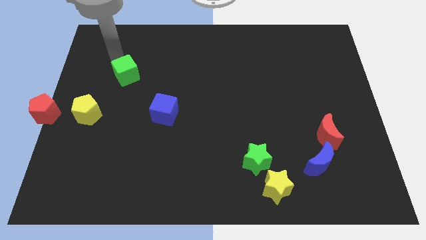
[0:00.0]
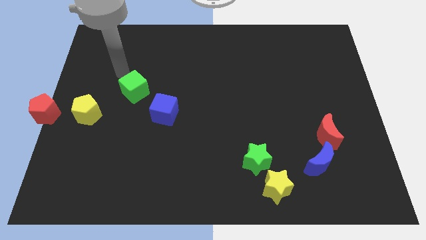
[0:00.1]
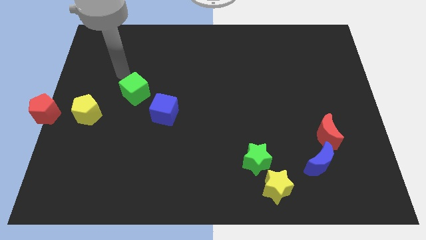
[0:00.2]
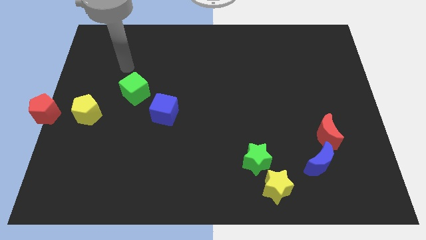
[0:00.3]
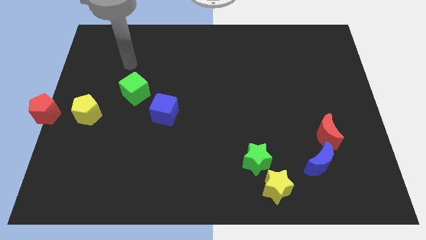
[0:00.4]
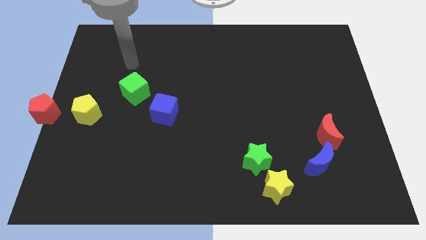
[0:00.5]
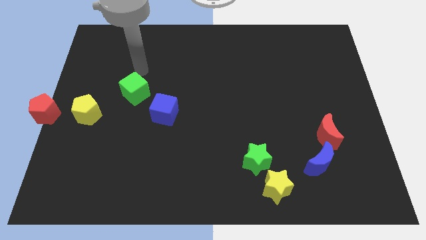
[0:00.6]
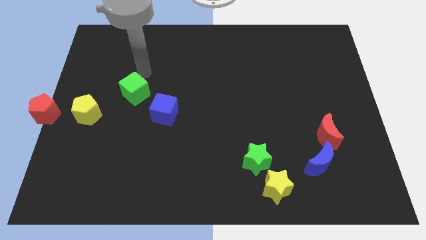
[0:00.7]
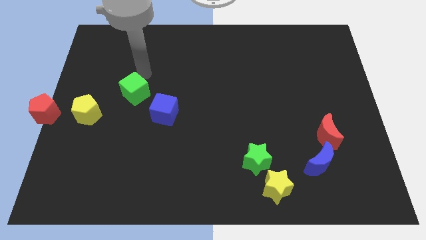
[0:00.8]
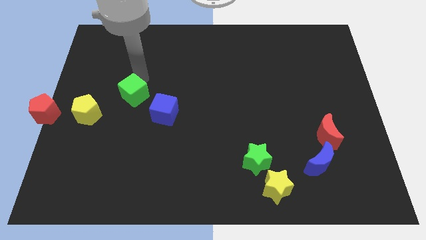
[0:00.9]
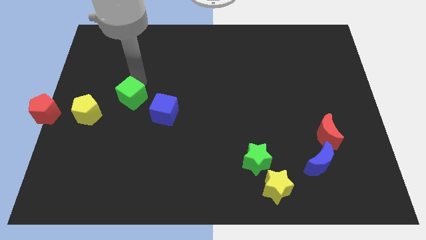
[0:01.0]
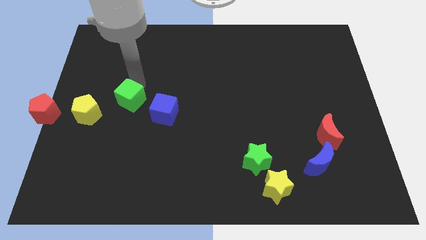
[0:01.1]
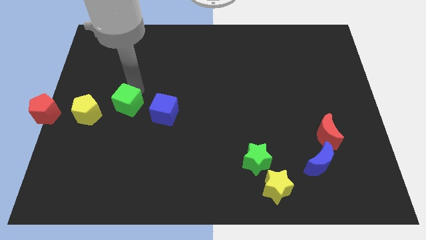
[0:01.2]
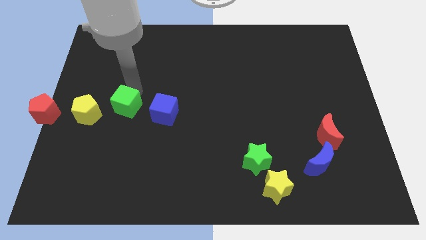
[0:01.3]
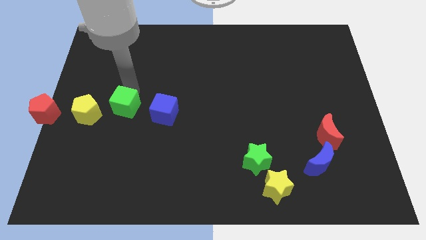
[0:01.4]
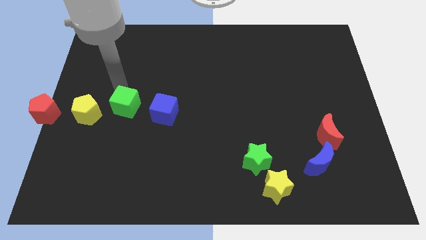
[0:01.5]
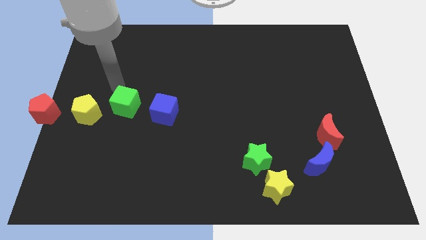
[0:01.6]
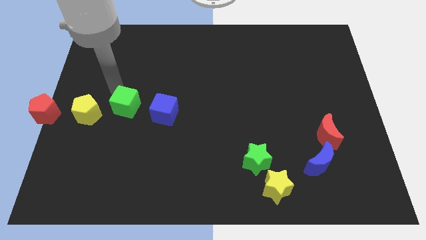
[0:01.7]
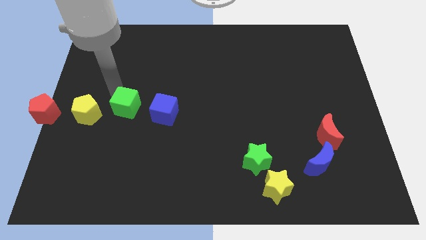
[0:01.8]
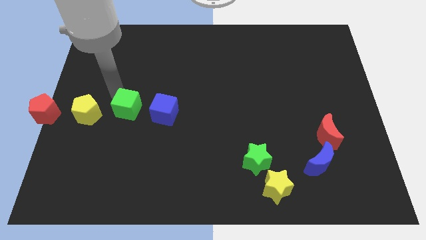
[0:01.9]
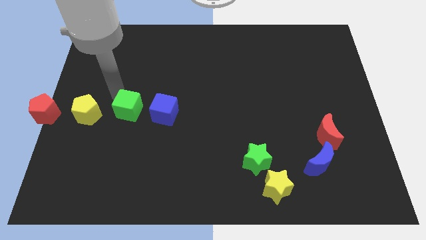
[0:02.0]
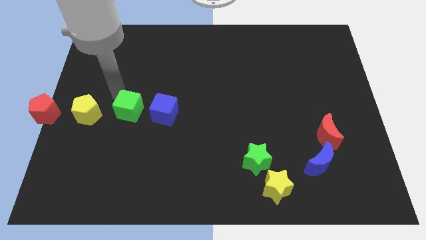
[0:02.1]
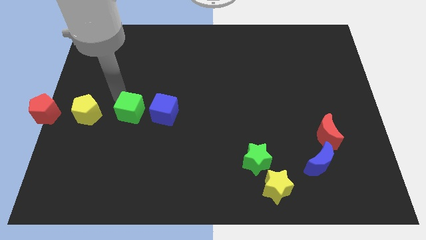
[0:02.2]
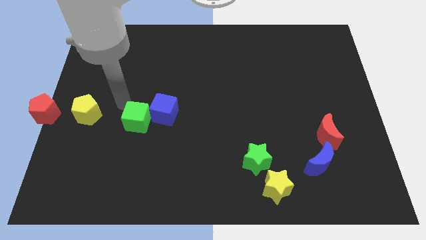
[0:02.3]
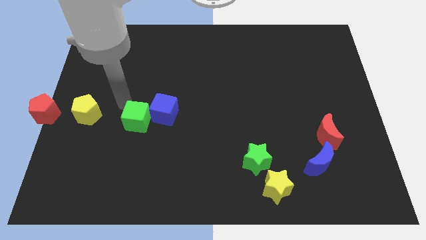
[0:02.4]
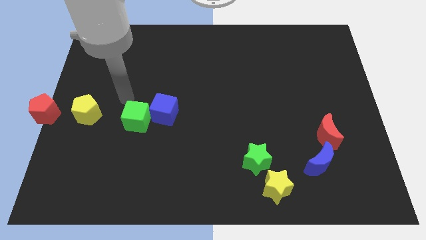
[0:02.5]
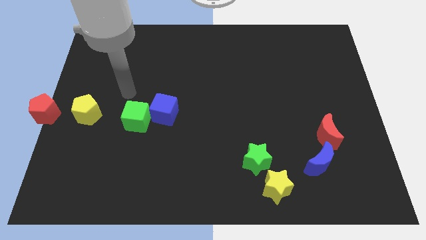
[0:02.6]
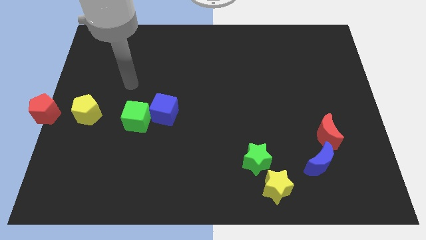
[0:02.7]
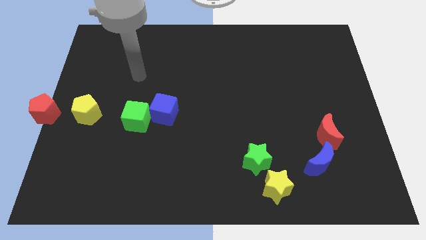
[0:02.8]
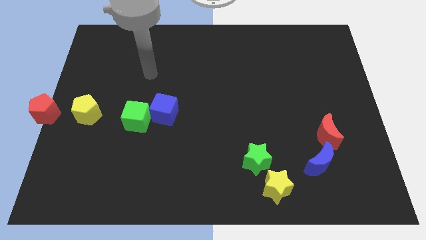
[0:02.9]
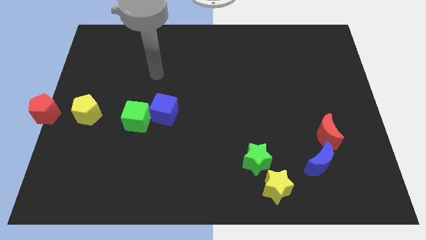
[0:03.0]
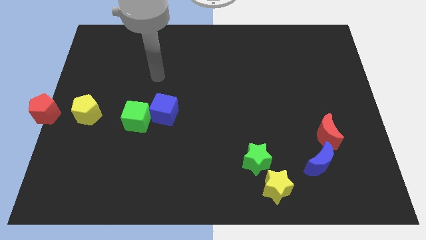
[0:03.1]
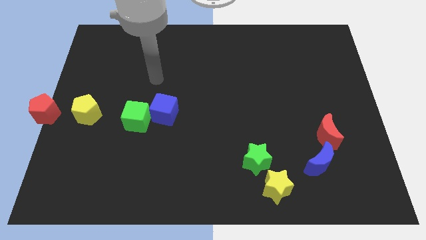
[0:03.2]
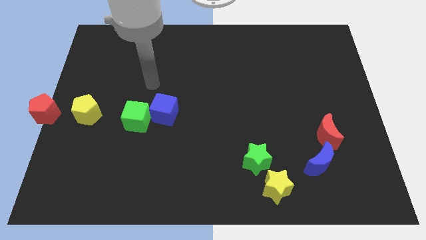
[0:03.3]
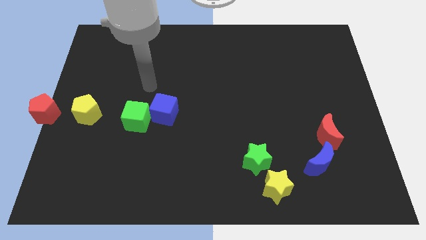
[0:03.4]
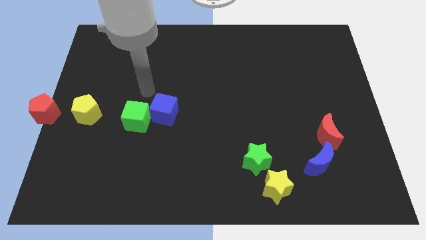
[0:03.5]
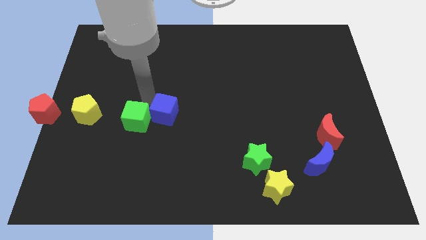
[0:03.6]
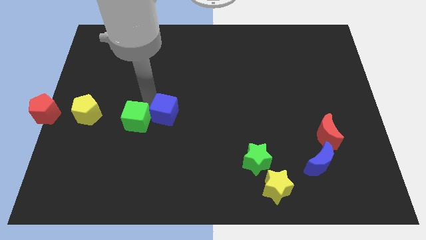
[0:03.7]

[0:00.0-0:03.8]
move the green cube parallel right to the yellow pentagon

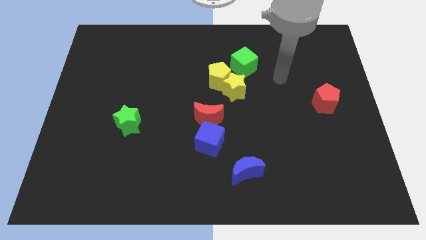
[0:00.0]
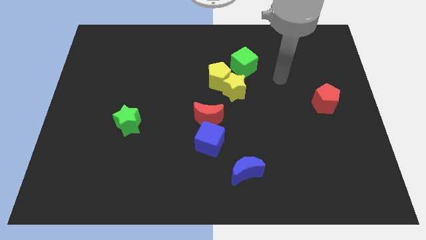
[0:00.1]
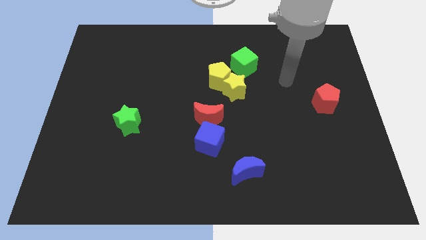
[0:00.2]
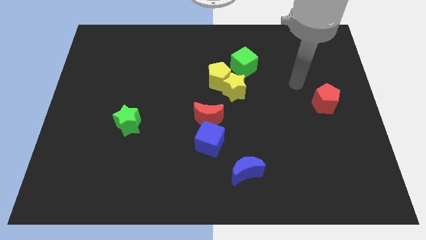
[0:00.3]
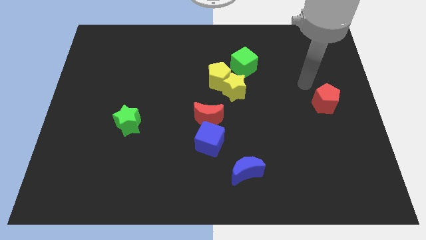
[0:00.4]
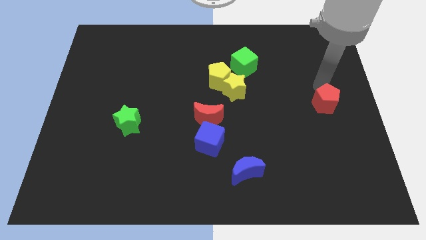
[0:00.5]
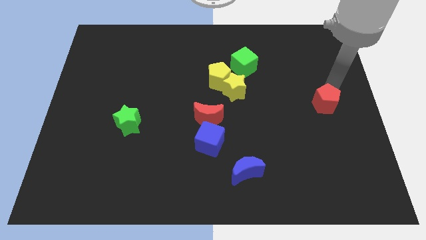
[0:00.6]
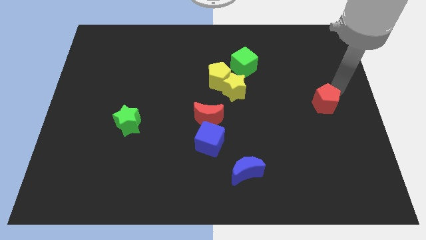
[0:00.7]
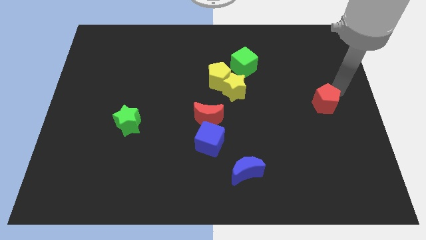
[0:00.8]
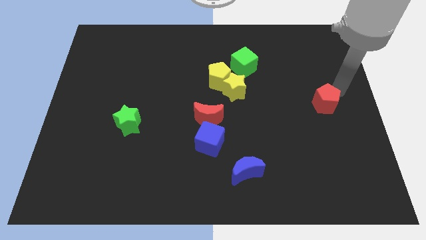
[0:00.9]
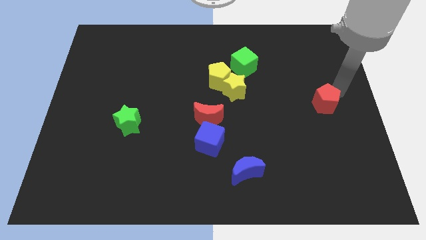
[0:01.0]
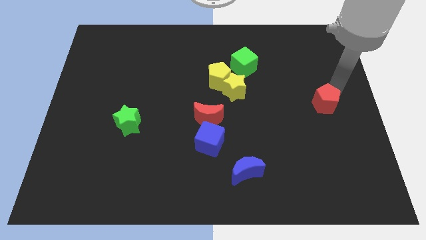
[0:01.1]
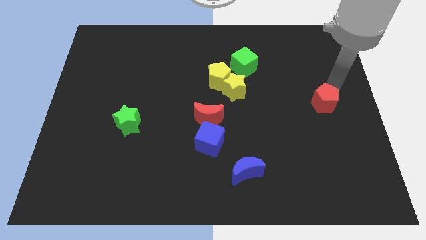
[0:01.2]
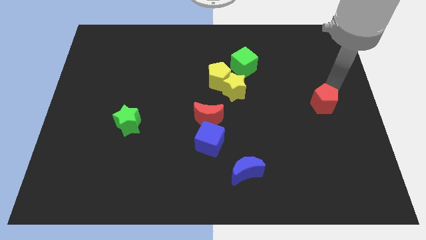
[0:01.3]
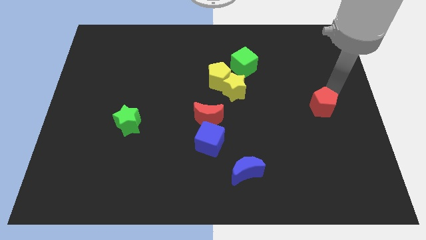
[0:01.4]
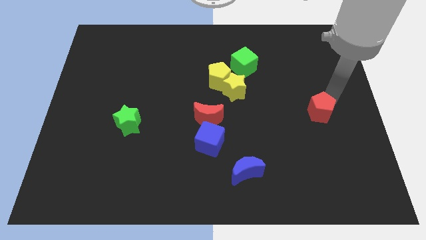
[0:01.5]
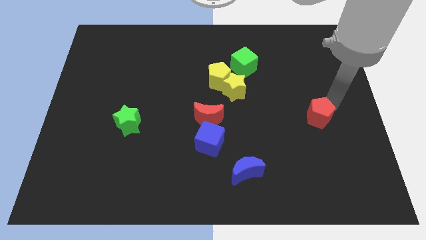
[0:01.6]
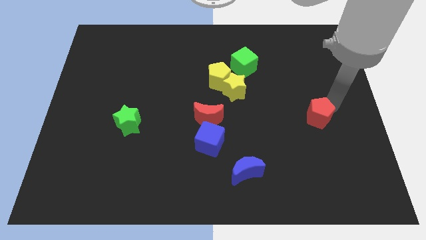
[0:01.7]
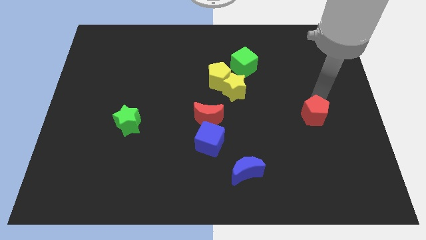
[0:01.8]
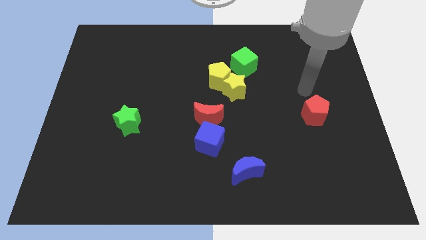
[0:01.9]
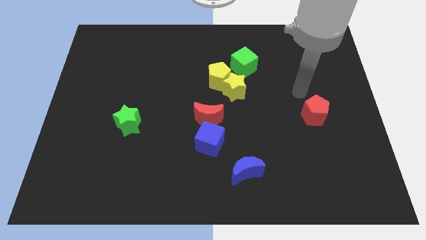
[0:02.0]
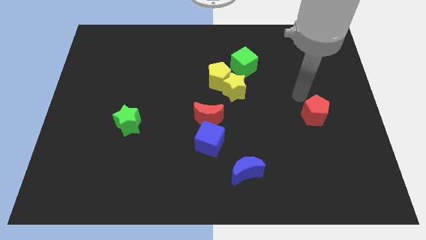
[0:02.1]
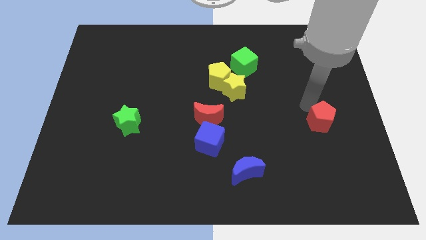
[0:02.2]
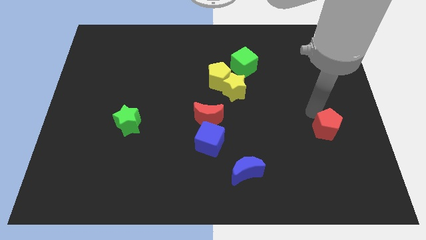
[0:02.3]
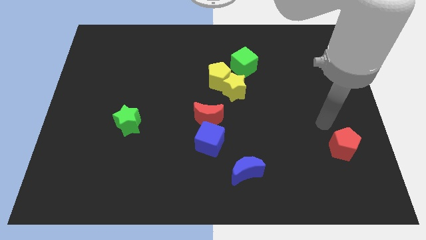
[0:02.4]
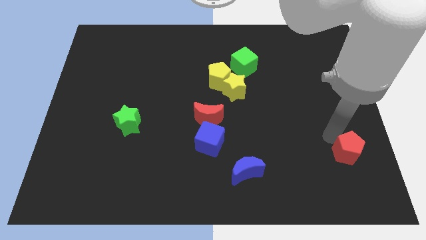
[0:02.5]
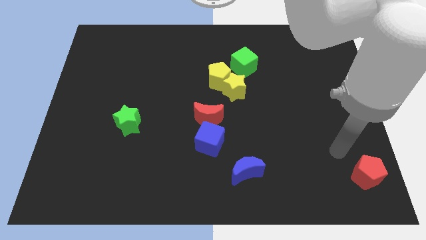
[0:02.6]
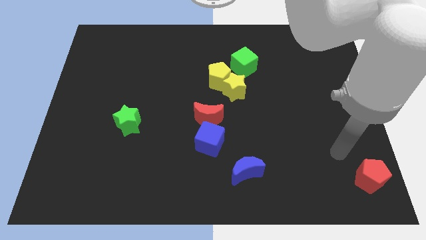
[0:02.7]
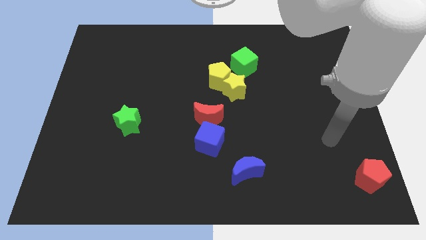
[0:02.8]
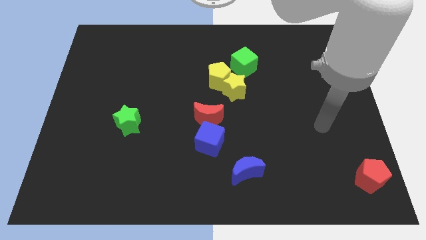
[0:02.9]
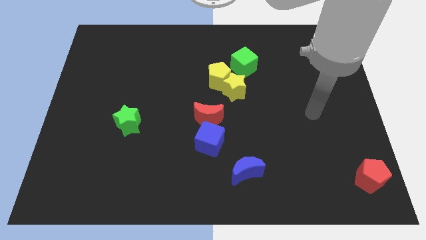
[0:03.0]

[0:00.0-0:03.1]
push red pentagon towards bottom right

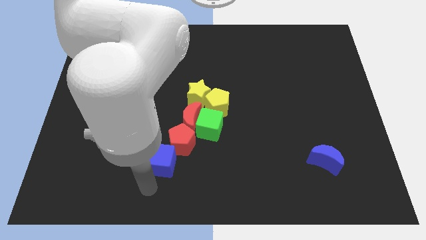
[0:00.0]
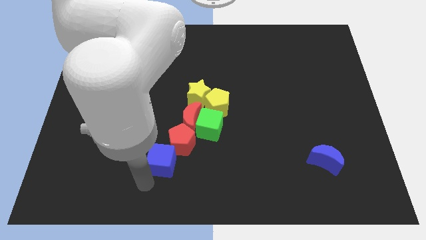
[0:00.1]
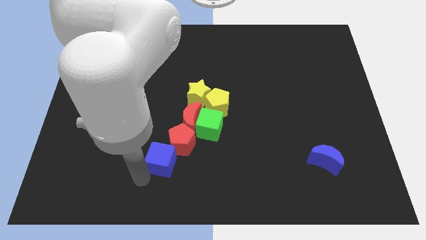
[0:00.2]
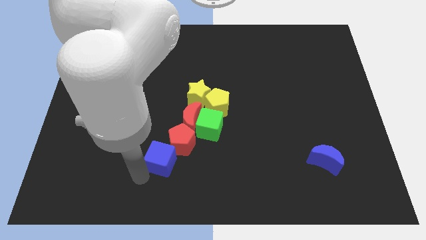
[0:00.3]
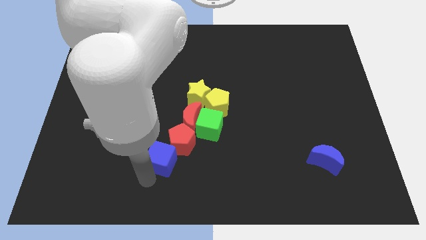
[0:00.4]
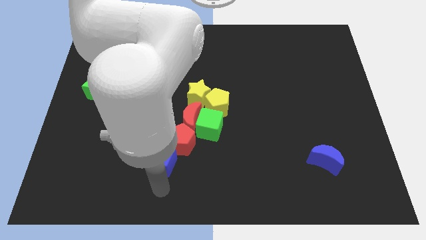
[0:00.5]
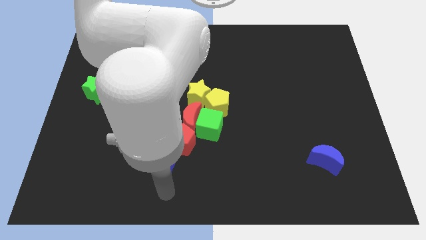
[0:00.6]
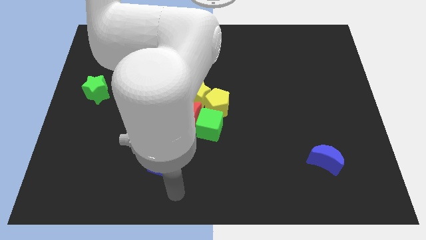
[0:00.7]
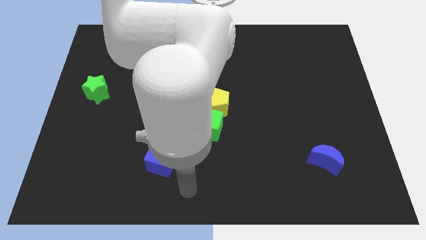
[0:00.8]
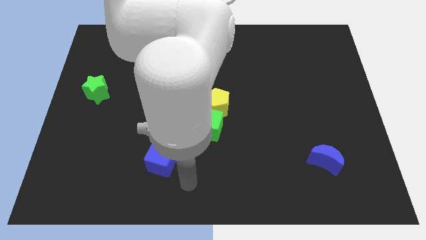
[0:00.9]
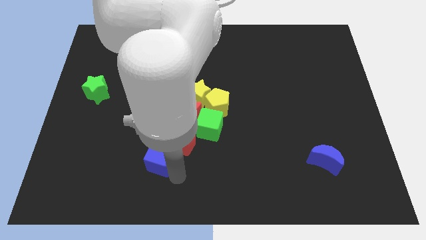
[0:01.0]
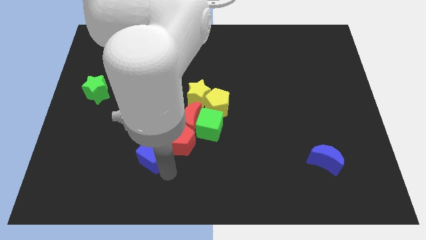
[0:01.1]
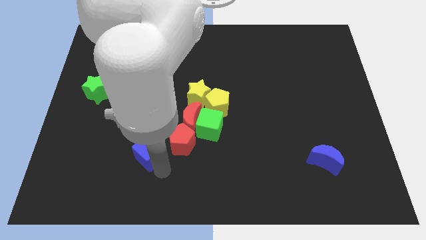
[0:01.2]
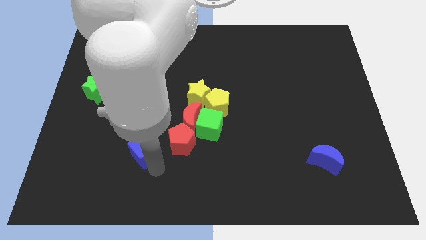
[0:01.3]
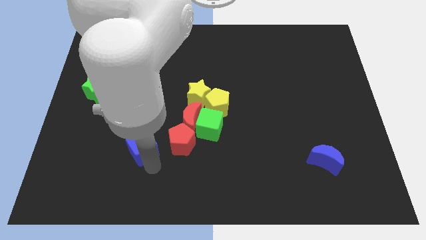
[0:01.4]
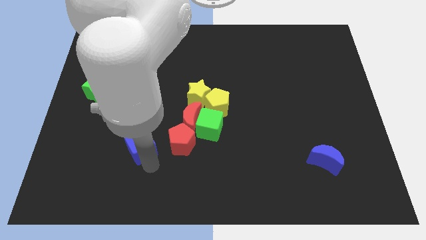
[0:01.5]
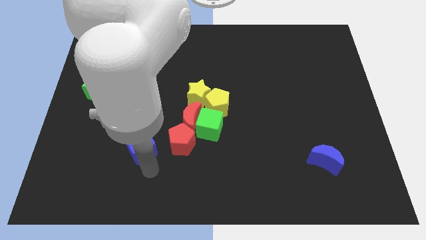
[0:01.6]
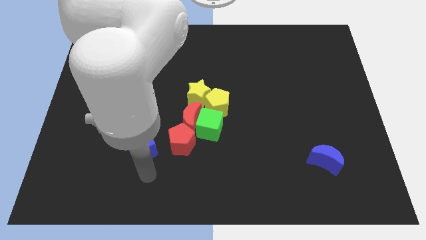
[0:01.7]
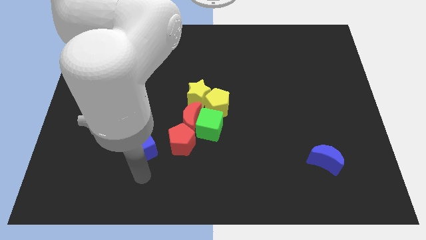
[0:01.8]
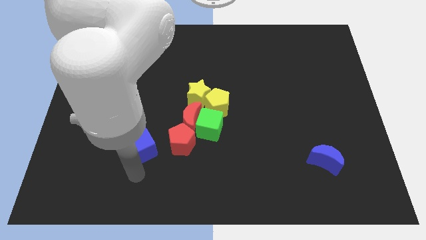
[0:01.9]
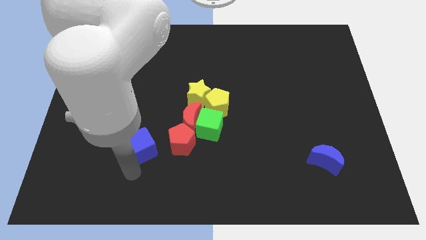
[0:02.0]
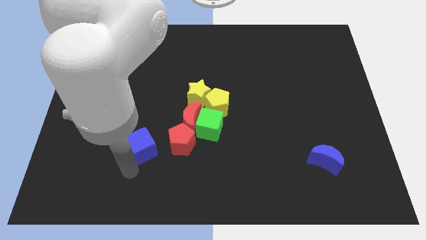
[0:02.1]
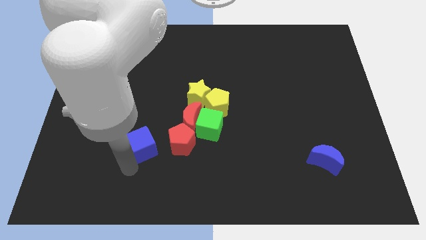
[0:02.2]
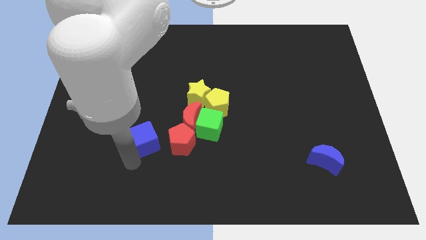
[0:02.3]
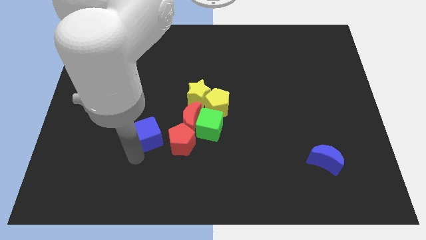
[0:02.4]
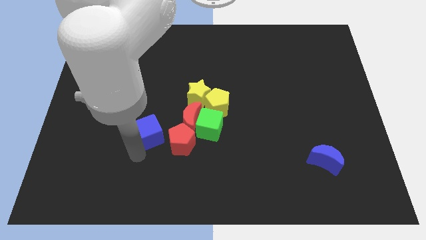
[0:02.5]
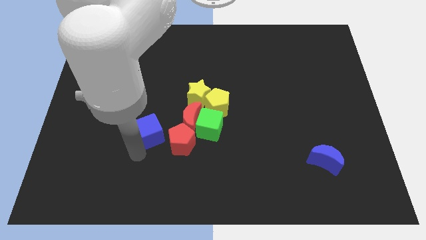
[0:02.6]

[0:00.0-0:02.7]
move blue cube ti the left of red pentagon
